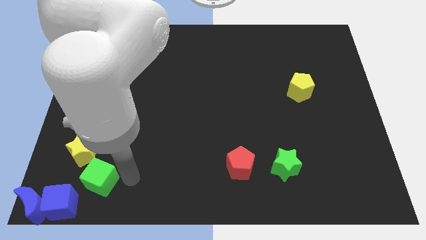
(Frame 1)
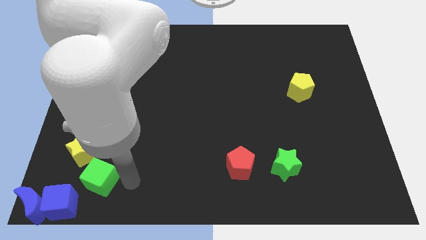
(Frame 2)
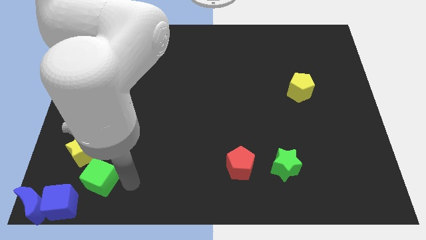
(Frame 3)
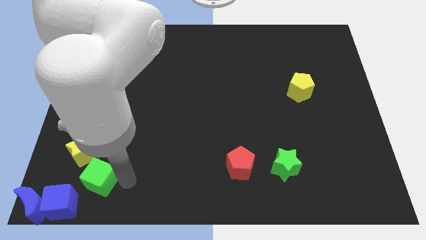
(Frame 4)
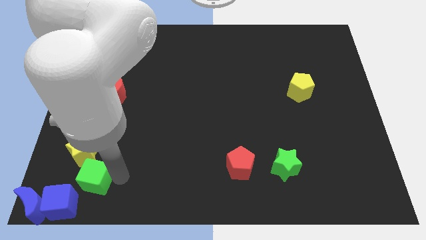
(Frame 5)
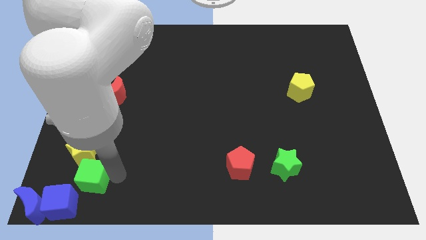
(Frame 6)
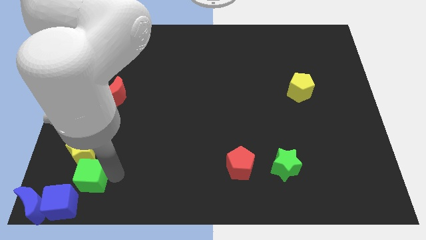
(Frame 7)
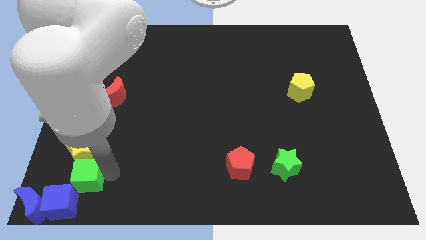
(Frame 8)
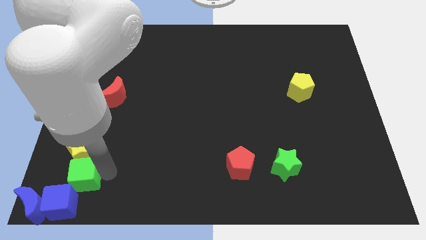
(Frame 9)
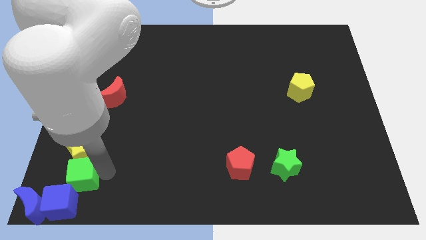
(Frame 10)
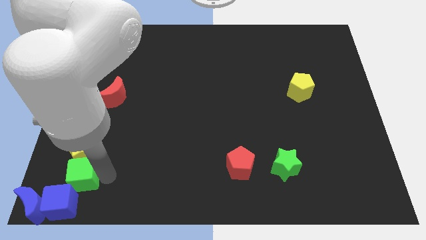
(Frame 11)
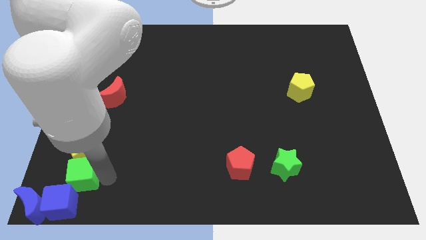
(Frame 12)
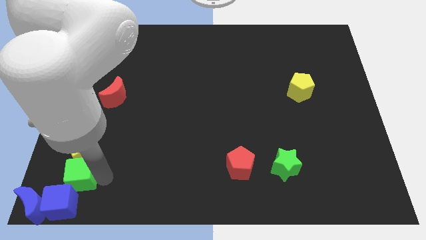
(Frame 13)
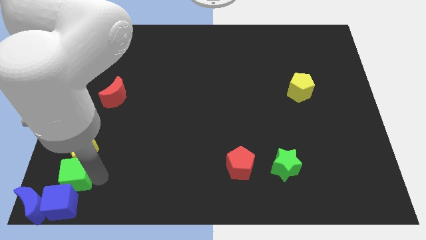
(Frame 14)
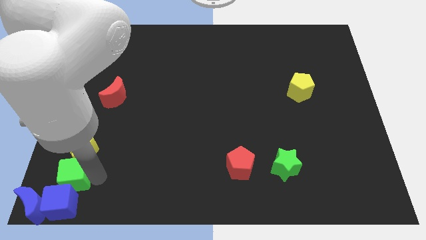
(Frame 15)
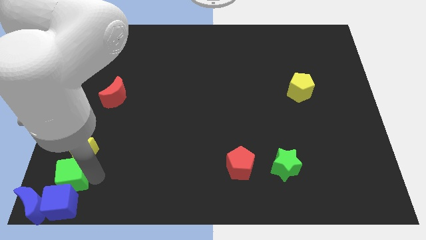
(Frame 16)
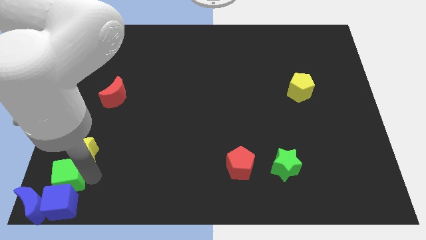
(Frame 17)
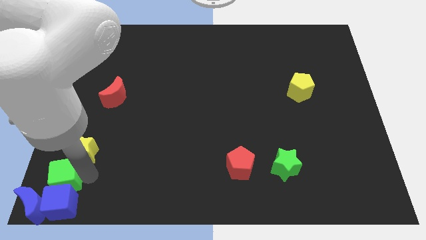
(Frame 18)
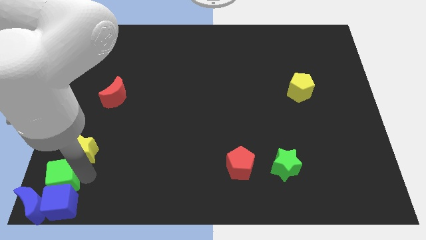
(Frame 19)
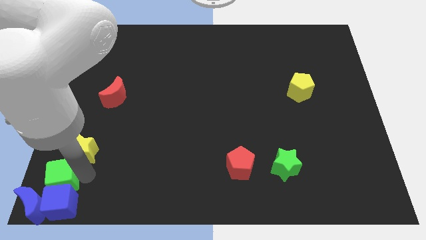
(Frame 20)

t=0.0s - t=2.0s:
place the green cube in between the blue cube and yellow star

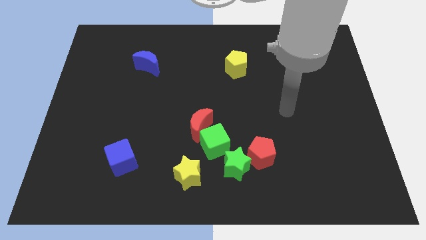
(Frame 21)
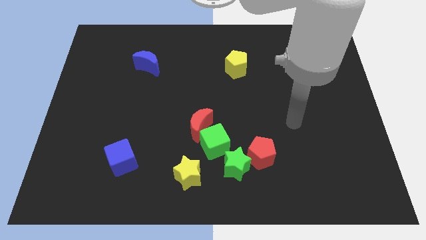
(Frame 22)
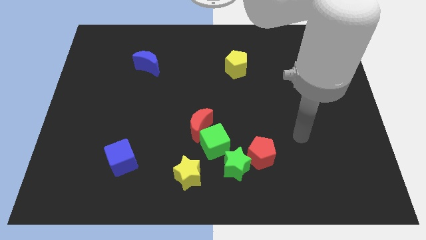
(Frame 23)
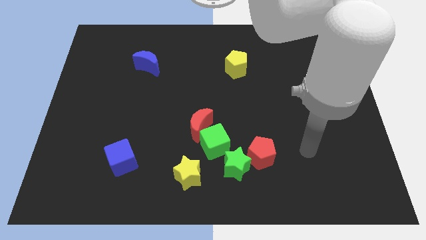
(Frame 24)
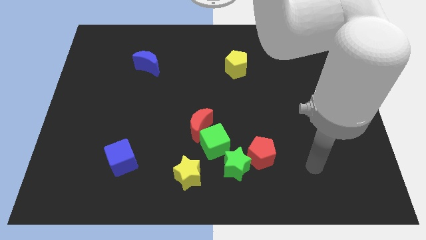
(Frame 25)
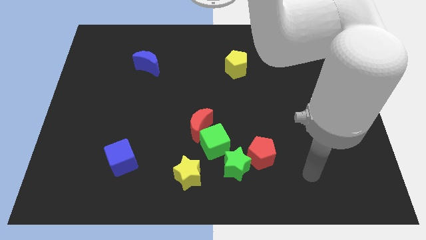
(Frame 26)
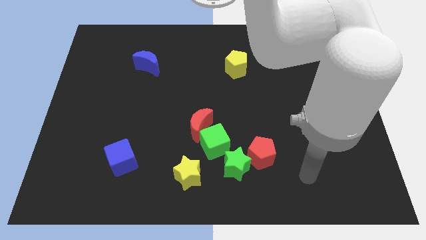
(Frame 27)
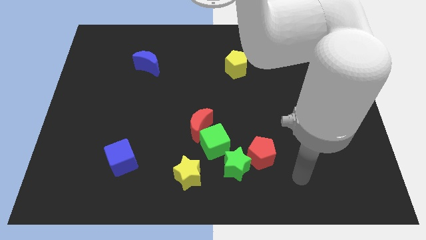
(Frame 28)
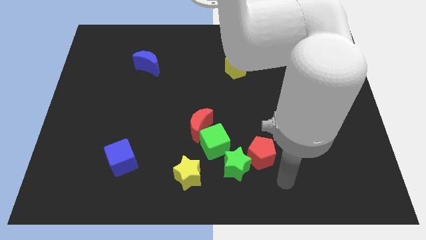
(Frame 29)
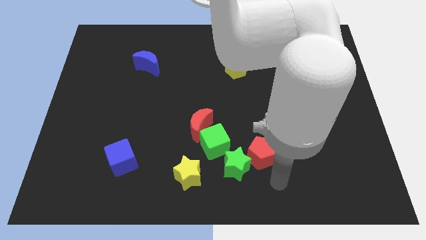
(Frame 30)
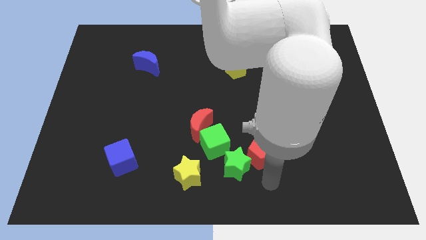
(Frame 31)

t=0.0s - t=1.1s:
point the arm below the red pentagon

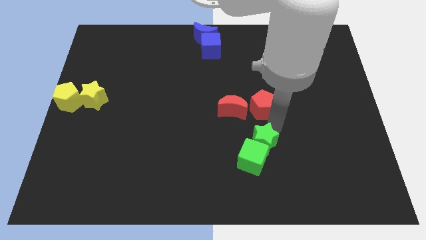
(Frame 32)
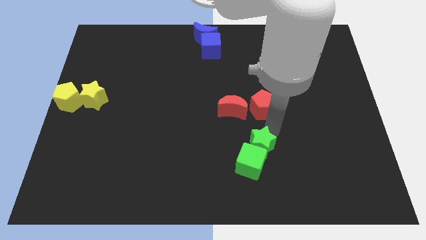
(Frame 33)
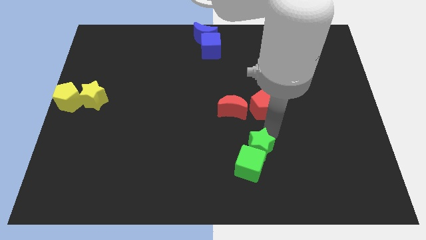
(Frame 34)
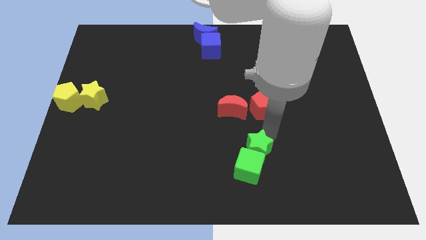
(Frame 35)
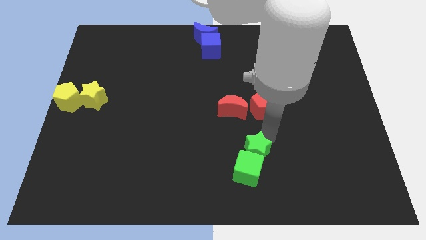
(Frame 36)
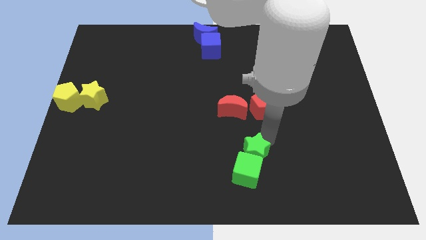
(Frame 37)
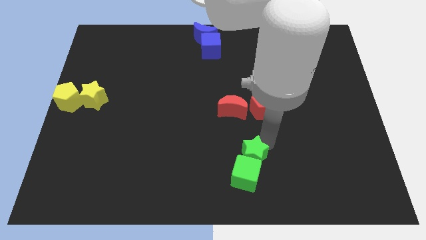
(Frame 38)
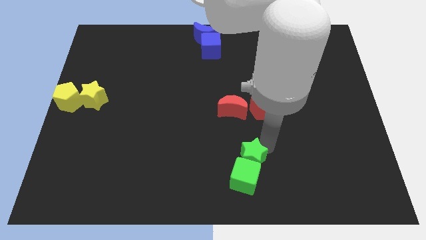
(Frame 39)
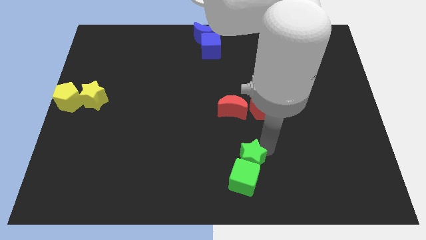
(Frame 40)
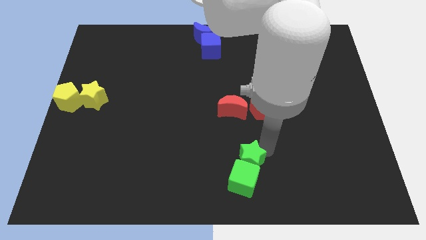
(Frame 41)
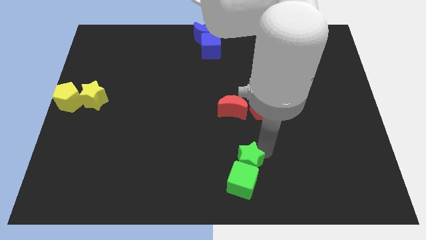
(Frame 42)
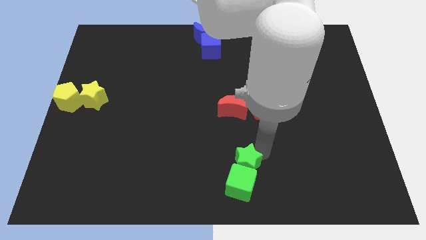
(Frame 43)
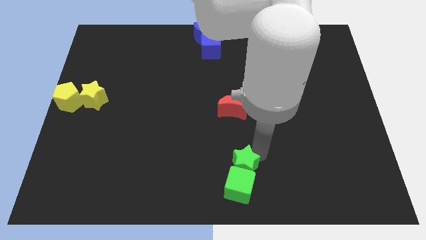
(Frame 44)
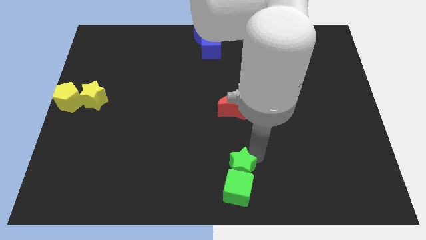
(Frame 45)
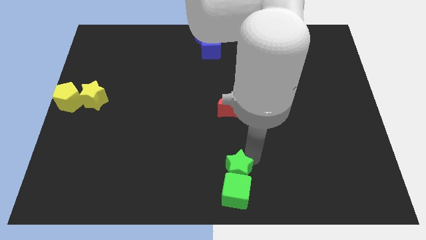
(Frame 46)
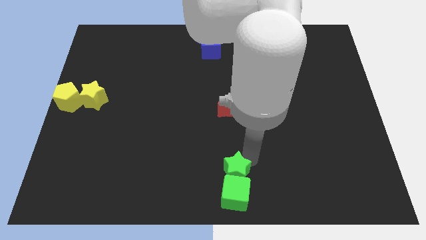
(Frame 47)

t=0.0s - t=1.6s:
place the green blocks vertically below the red crescent

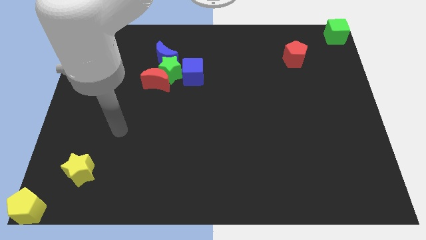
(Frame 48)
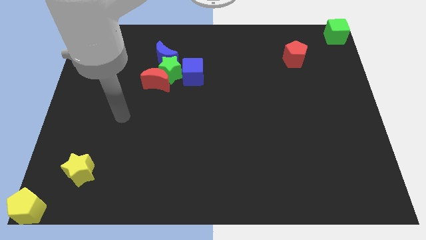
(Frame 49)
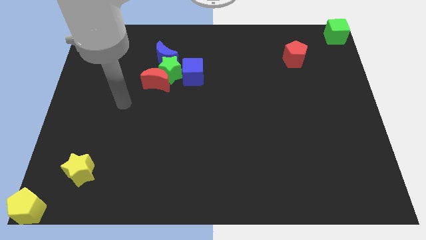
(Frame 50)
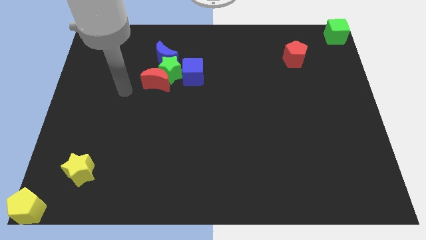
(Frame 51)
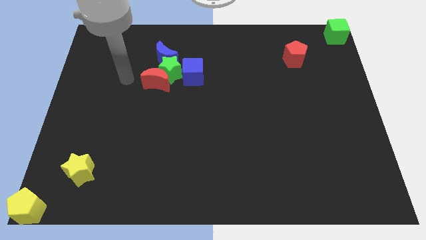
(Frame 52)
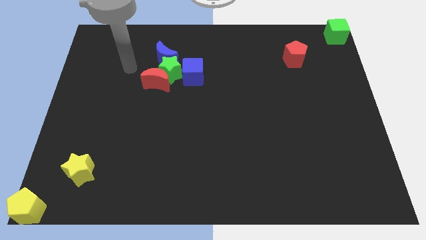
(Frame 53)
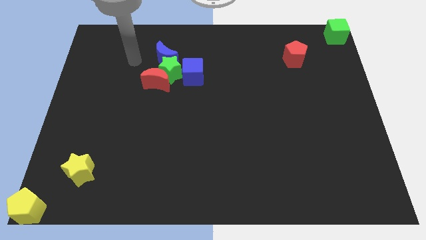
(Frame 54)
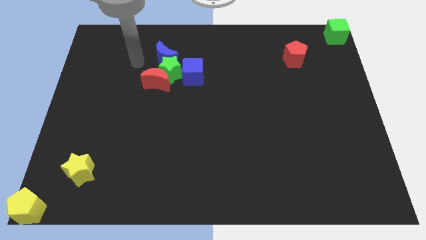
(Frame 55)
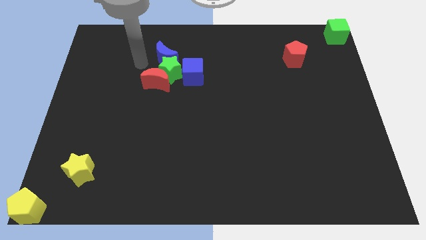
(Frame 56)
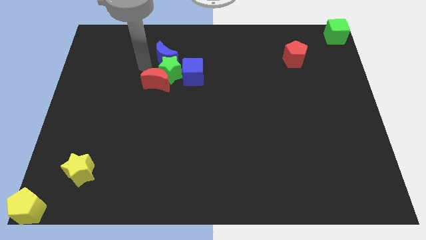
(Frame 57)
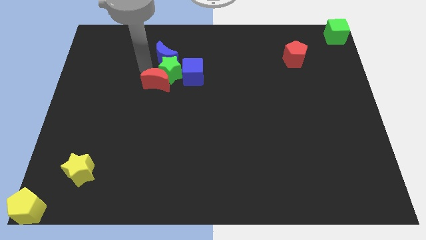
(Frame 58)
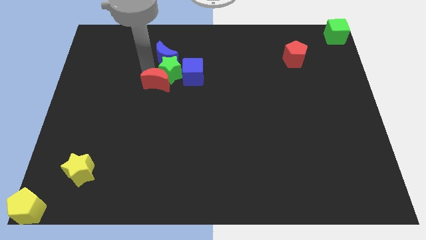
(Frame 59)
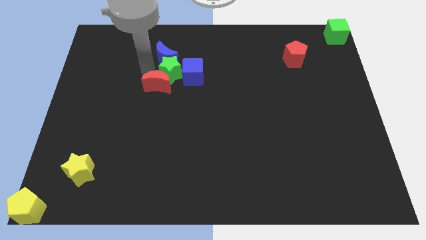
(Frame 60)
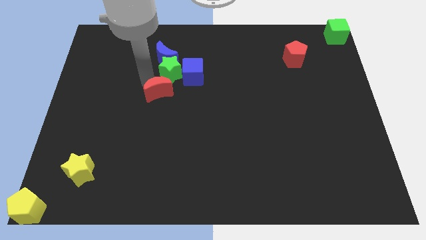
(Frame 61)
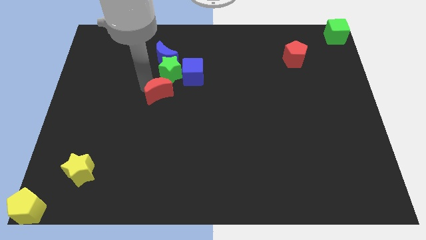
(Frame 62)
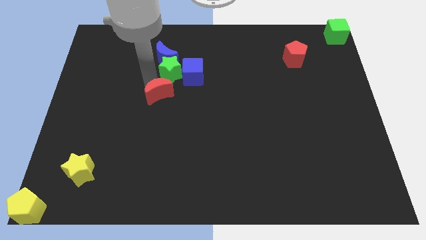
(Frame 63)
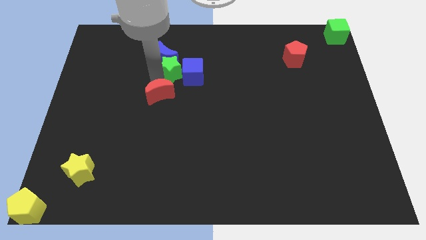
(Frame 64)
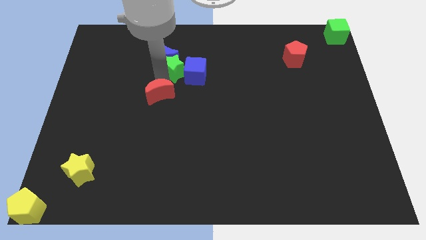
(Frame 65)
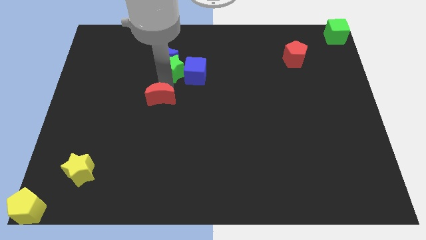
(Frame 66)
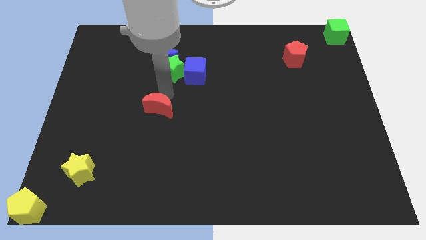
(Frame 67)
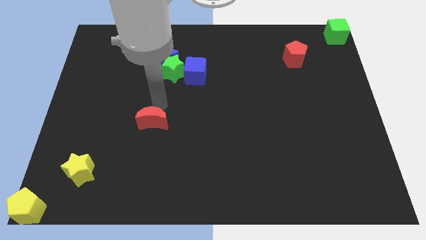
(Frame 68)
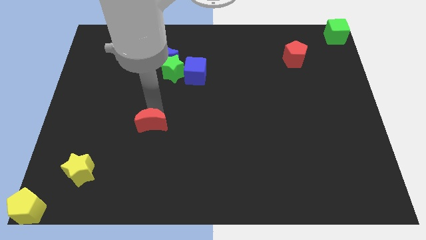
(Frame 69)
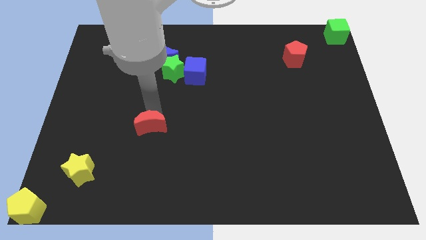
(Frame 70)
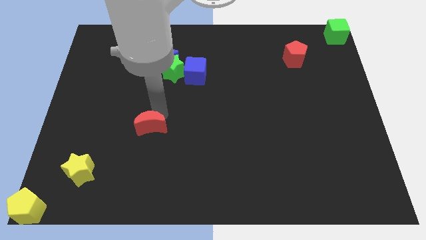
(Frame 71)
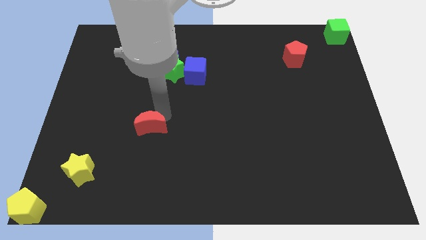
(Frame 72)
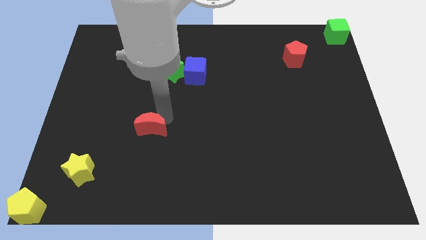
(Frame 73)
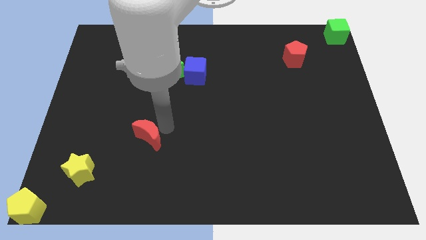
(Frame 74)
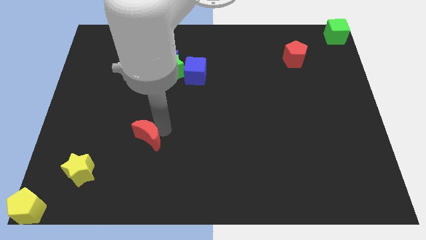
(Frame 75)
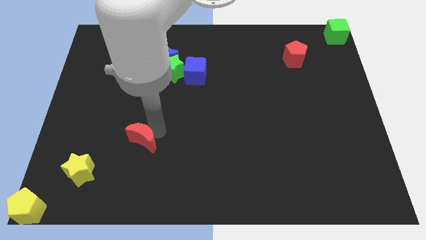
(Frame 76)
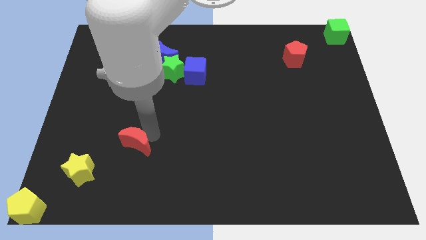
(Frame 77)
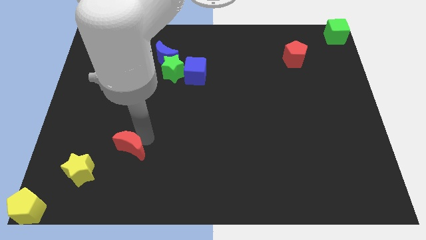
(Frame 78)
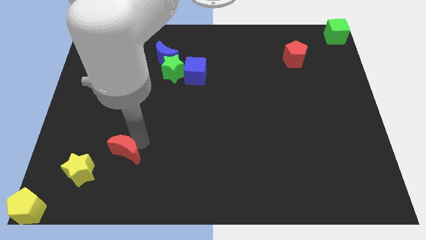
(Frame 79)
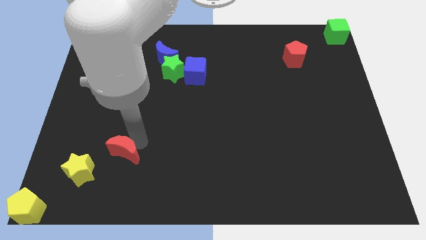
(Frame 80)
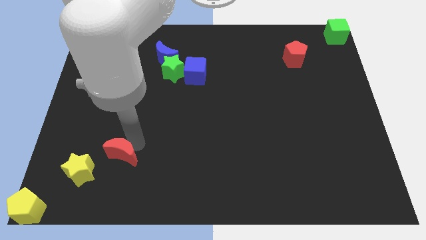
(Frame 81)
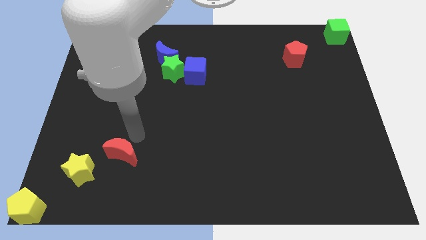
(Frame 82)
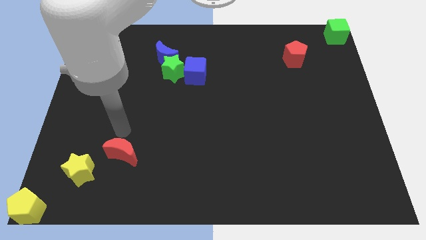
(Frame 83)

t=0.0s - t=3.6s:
separate the red moon from the green star

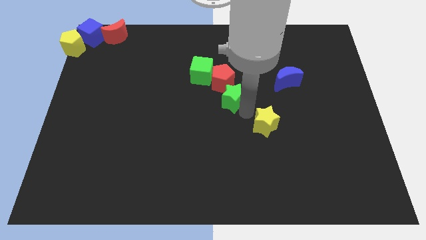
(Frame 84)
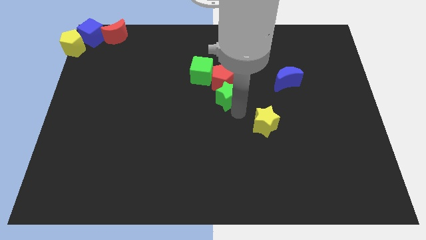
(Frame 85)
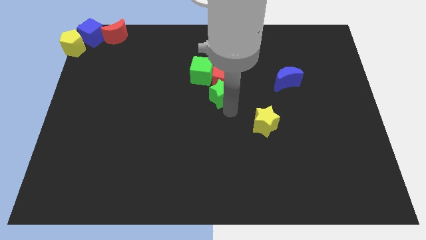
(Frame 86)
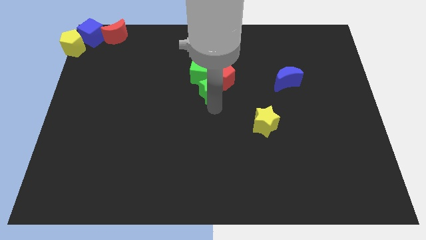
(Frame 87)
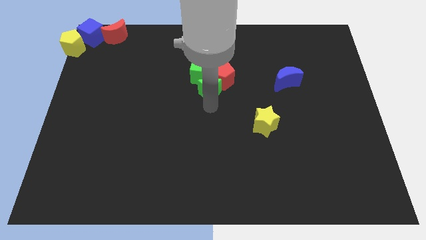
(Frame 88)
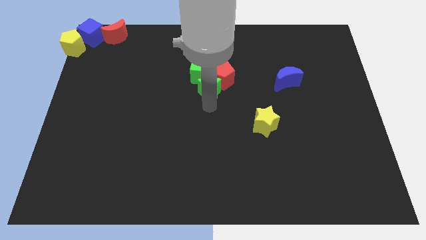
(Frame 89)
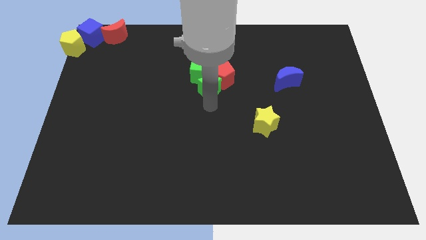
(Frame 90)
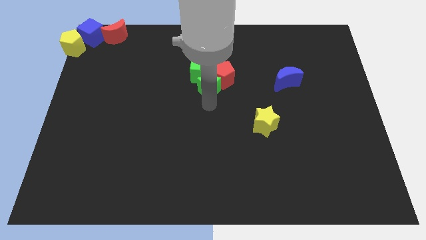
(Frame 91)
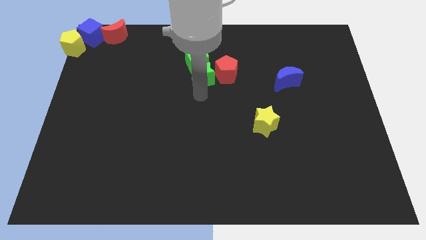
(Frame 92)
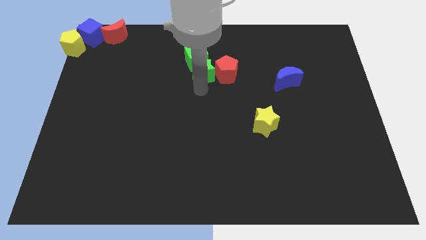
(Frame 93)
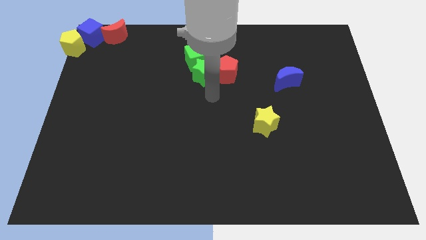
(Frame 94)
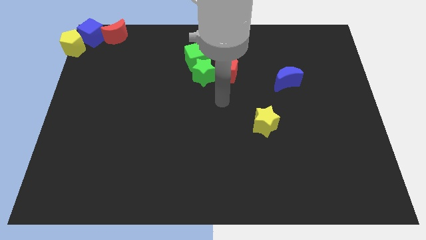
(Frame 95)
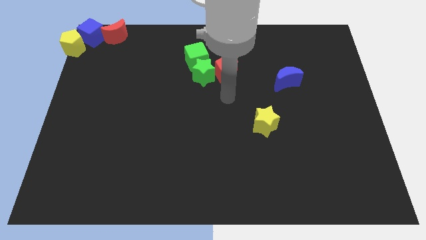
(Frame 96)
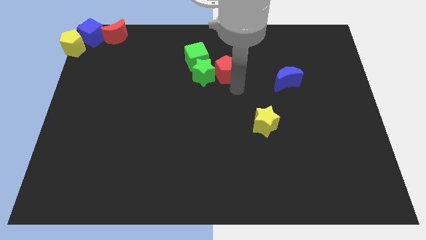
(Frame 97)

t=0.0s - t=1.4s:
push the green cube with the green star towards the top center of the board
